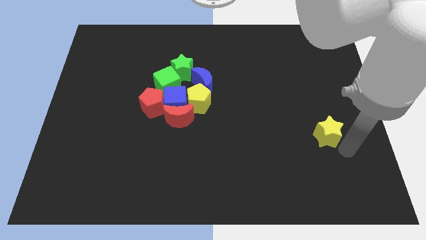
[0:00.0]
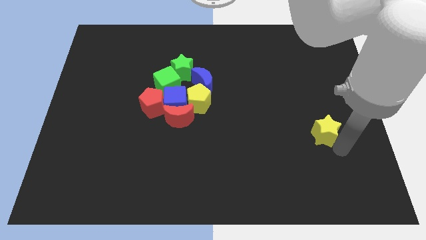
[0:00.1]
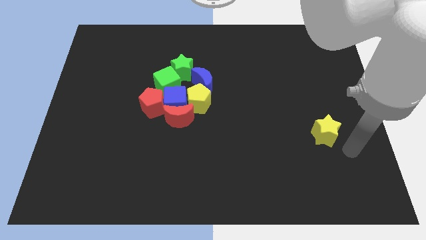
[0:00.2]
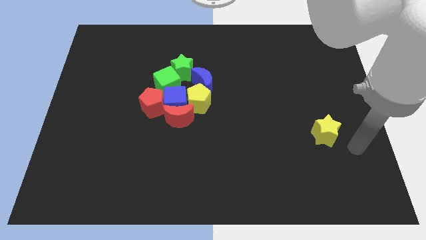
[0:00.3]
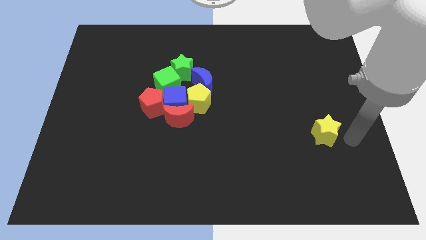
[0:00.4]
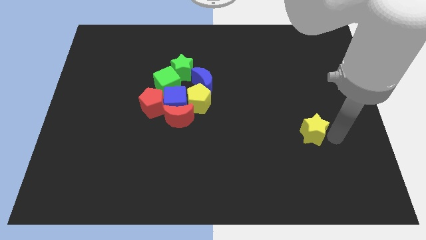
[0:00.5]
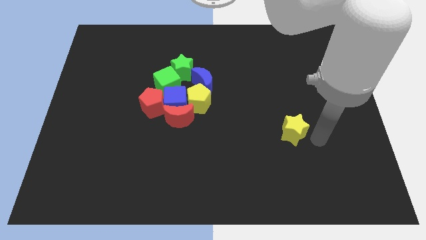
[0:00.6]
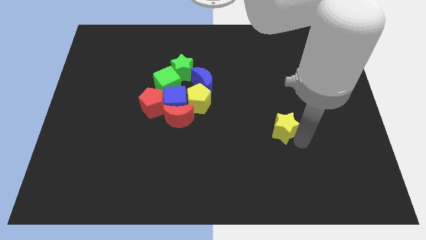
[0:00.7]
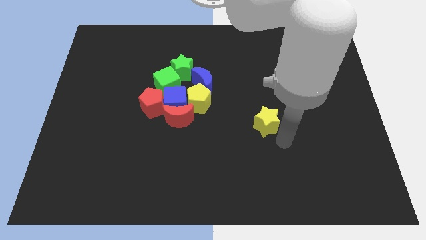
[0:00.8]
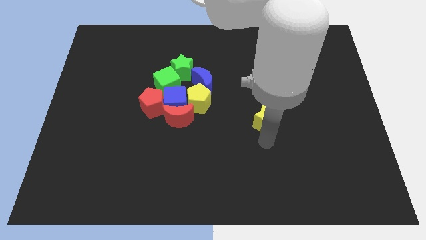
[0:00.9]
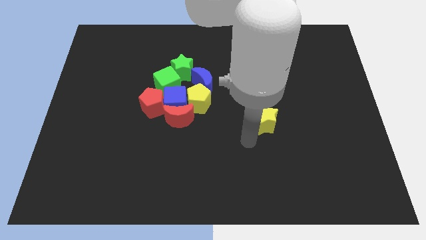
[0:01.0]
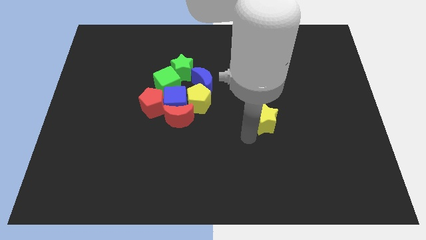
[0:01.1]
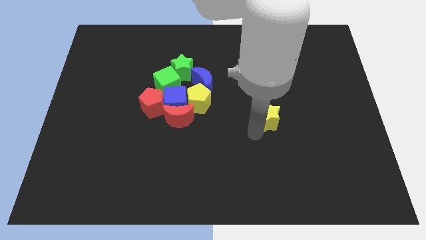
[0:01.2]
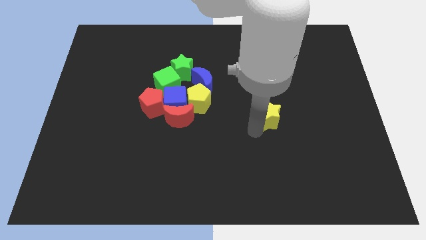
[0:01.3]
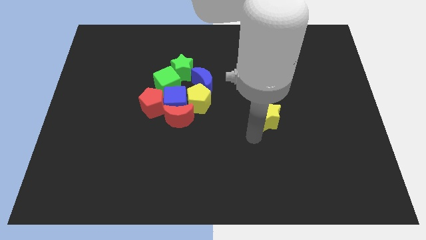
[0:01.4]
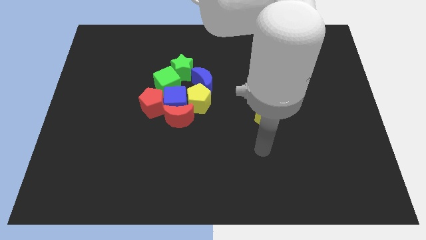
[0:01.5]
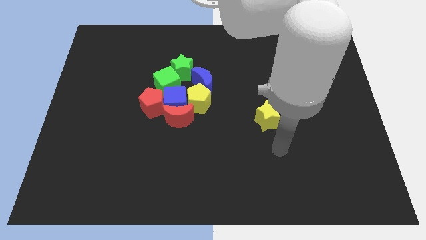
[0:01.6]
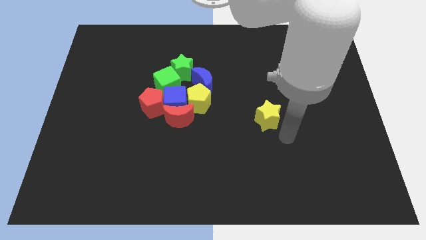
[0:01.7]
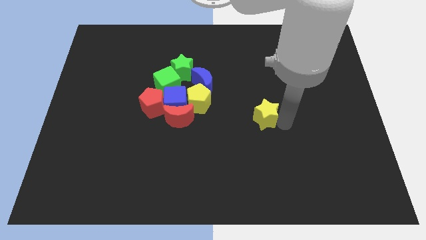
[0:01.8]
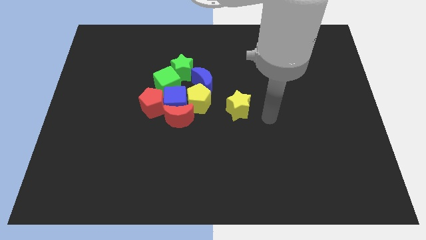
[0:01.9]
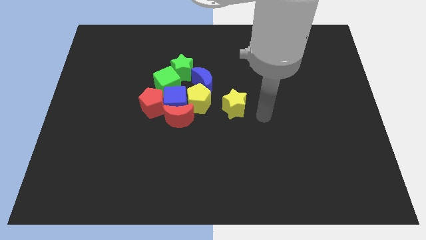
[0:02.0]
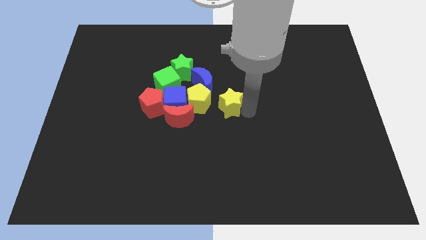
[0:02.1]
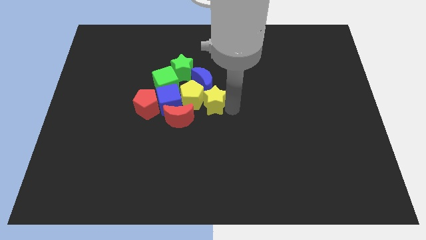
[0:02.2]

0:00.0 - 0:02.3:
move the yellow star towards right side of the yellow pentagon

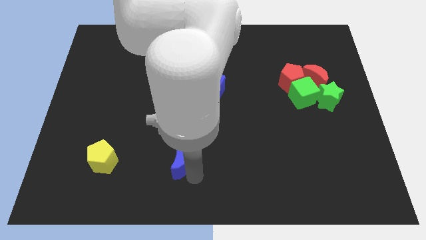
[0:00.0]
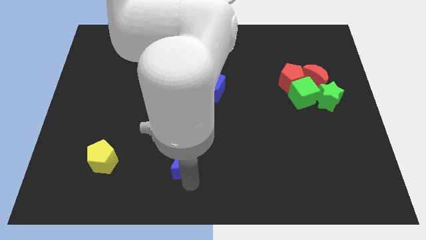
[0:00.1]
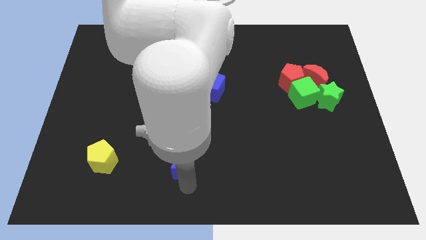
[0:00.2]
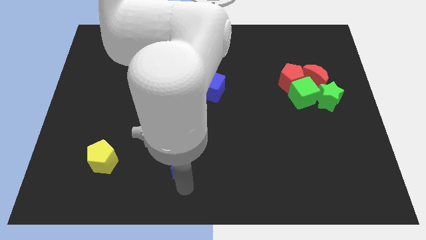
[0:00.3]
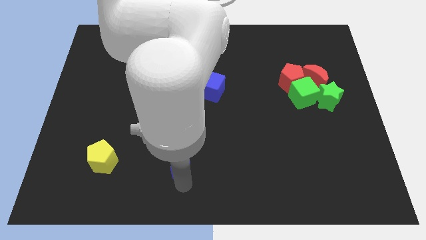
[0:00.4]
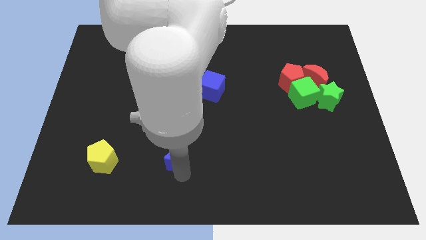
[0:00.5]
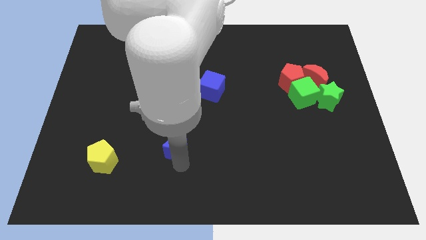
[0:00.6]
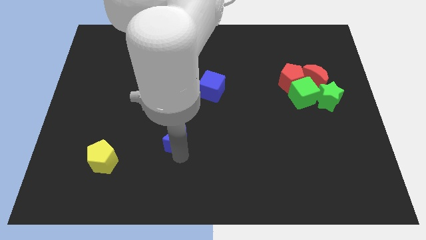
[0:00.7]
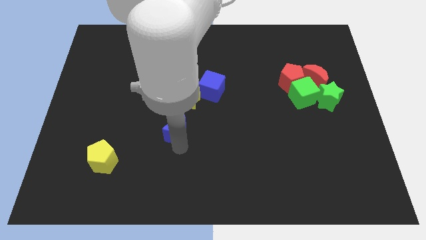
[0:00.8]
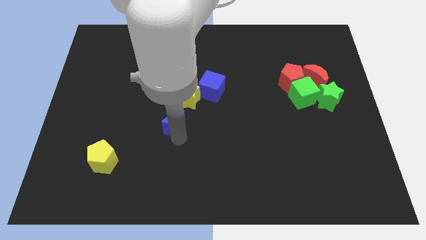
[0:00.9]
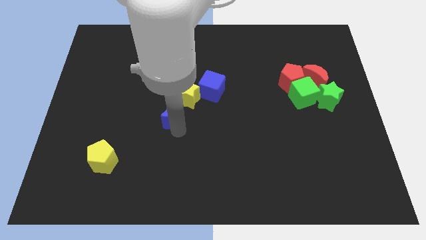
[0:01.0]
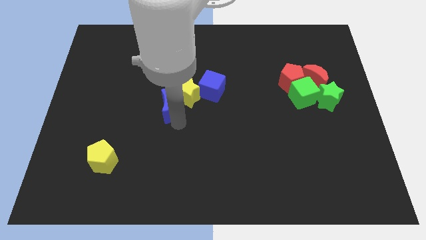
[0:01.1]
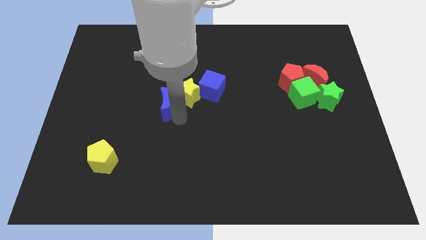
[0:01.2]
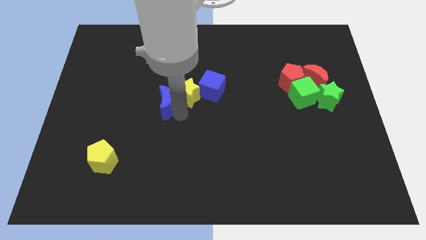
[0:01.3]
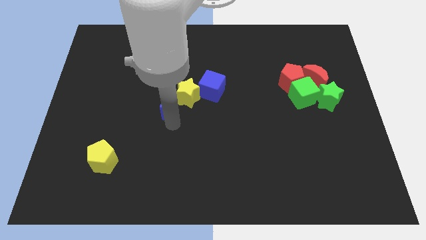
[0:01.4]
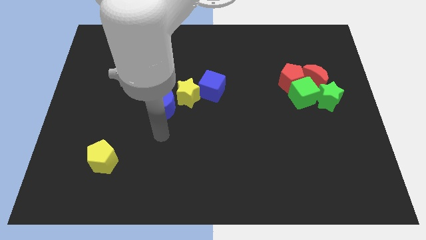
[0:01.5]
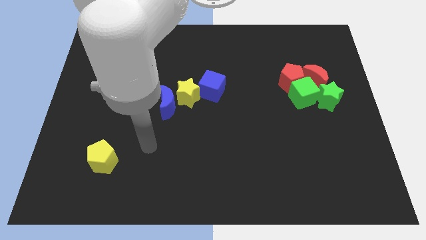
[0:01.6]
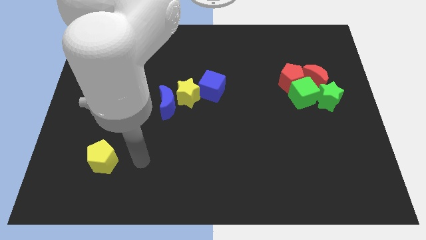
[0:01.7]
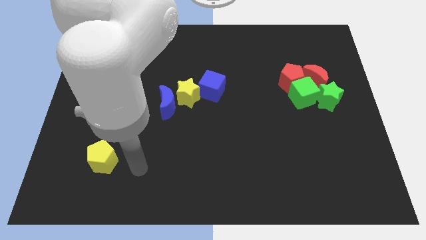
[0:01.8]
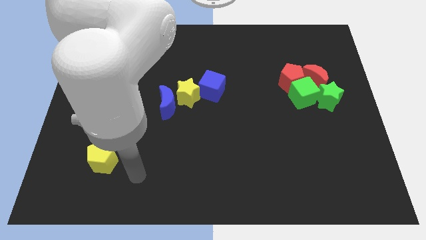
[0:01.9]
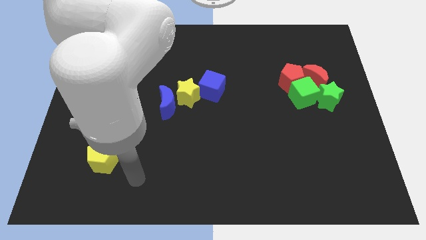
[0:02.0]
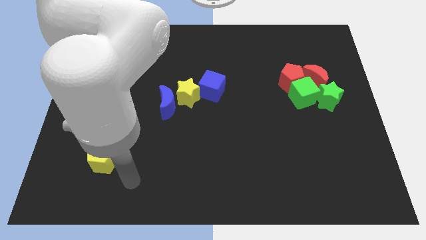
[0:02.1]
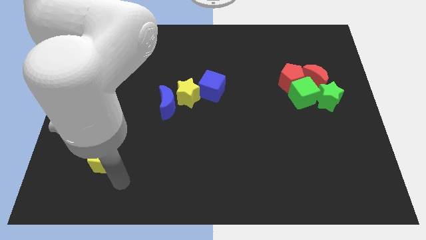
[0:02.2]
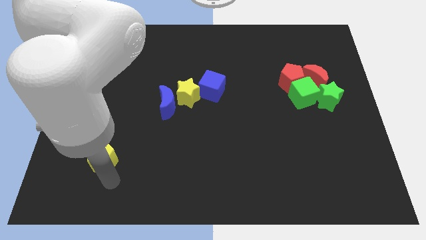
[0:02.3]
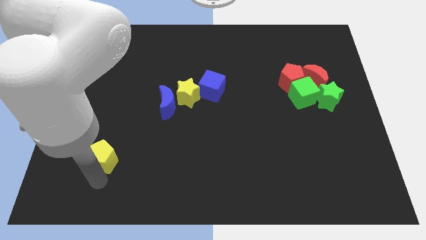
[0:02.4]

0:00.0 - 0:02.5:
move the blue crescent close to the yellow star and go away

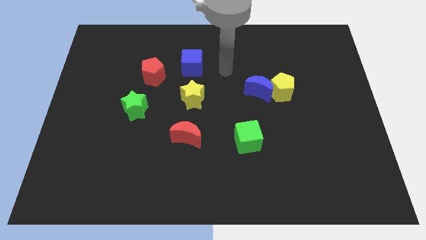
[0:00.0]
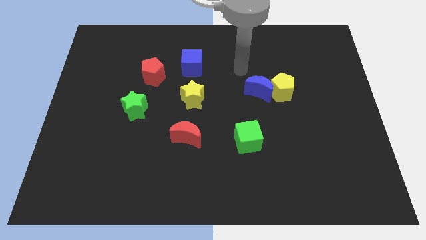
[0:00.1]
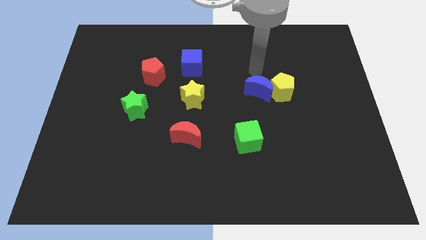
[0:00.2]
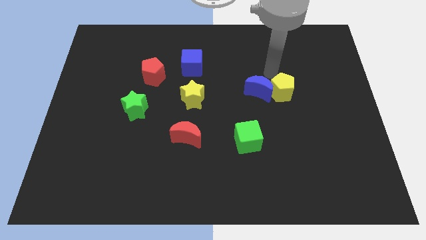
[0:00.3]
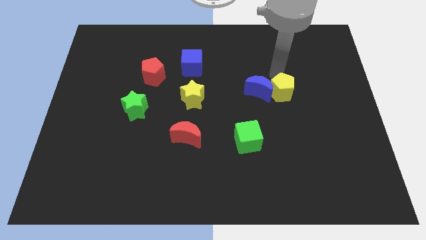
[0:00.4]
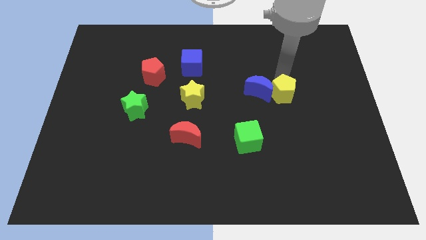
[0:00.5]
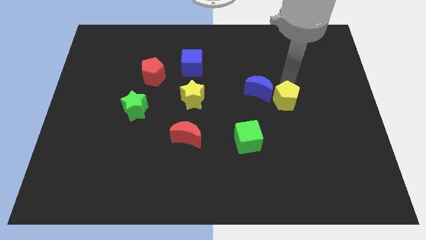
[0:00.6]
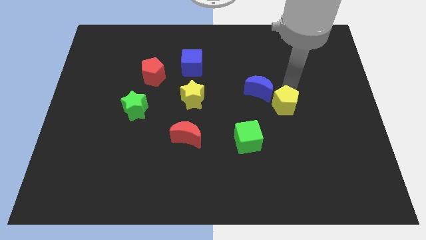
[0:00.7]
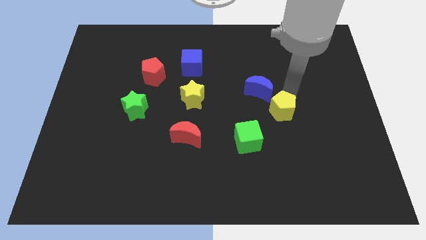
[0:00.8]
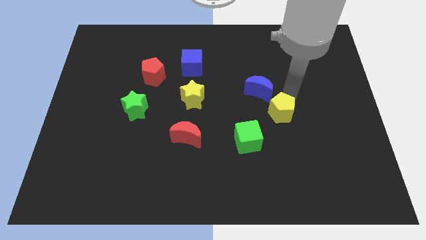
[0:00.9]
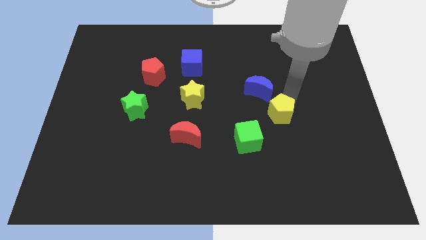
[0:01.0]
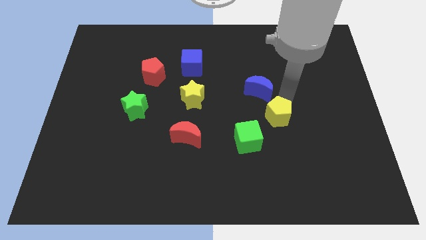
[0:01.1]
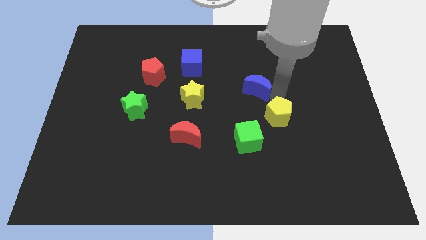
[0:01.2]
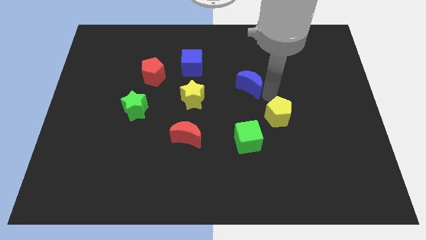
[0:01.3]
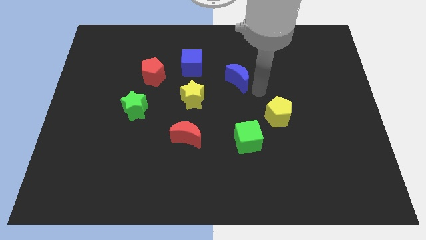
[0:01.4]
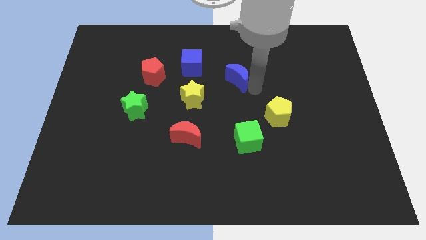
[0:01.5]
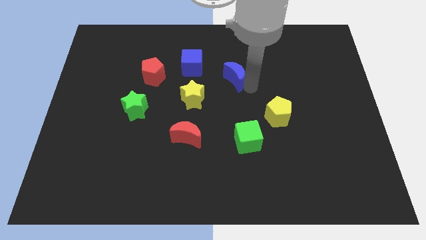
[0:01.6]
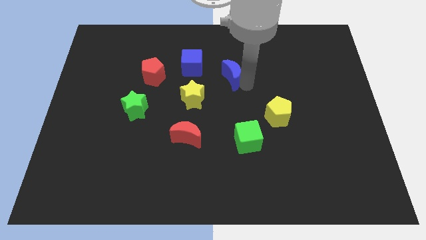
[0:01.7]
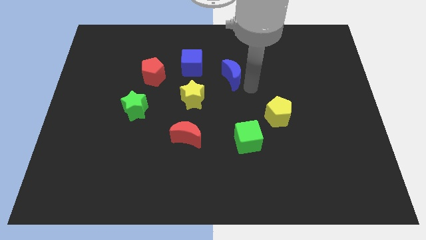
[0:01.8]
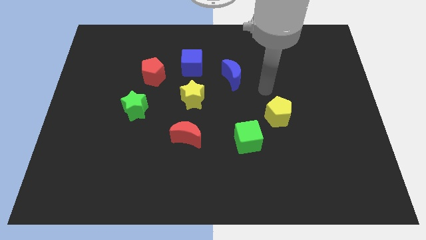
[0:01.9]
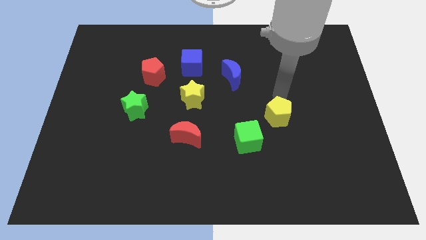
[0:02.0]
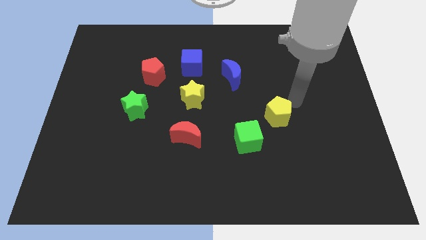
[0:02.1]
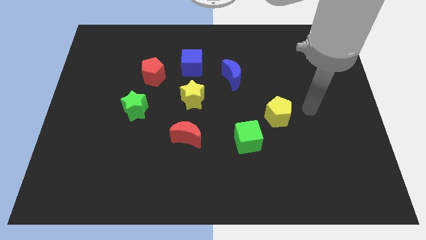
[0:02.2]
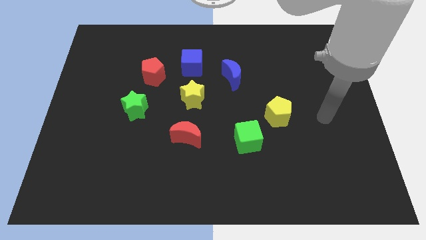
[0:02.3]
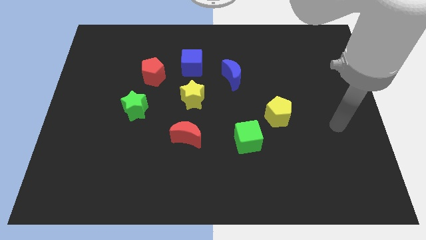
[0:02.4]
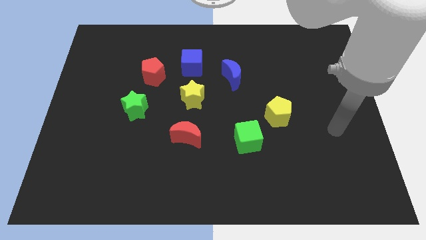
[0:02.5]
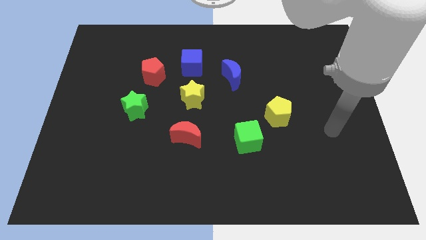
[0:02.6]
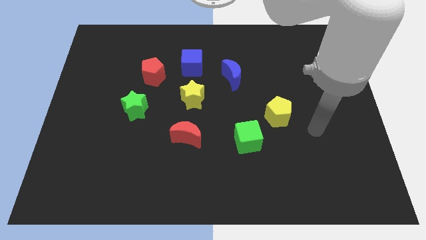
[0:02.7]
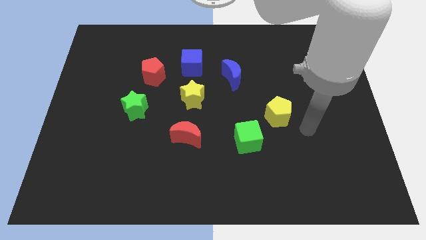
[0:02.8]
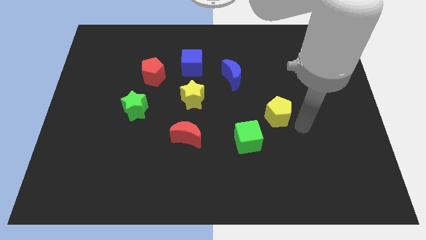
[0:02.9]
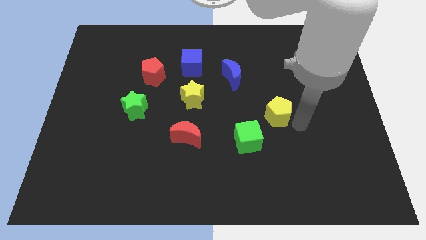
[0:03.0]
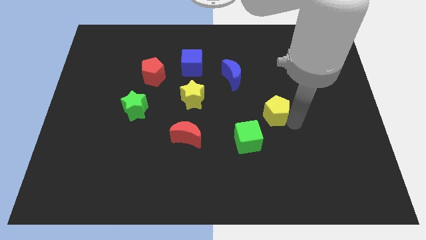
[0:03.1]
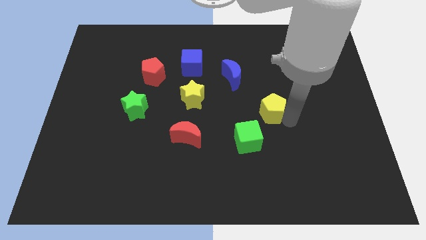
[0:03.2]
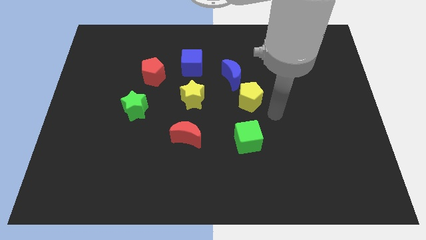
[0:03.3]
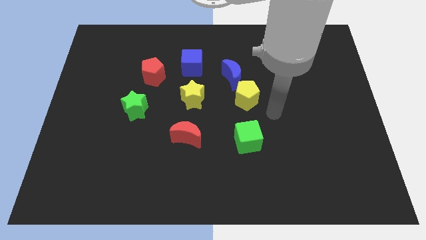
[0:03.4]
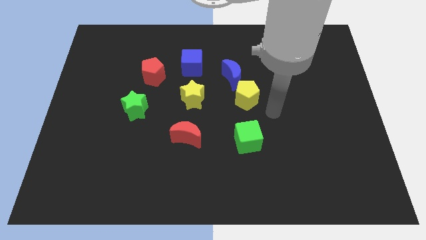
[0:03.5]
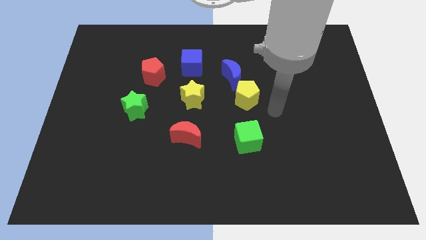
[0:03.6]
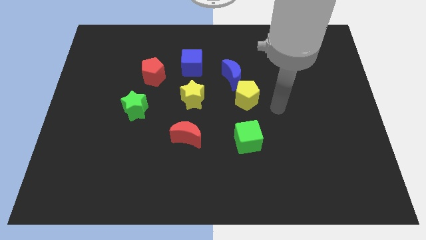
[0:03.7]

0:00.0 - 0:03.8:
push yellow pentagon above green cube

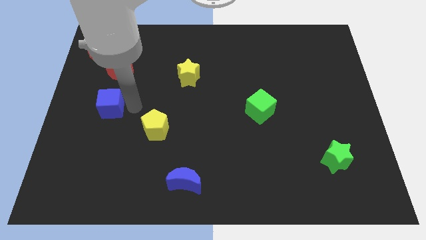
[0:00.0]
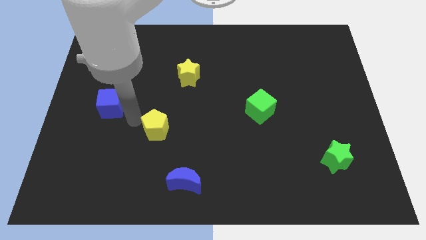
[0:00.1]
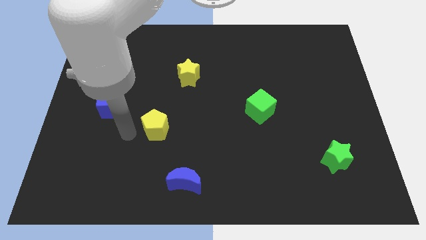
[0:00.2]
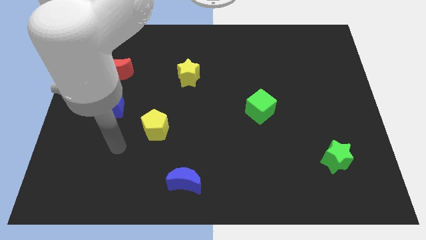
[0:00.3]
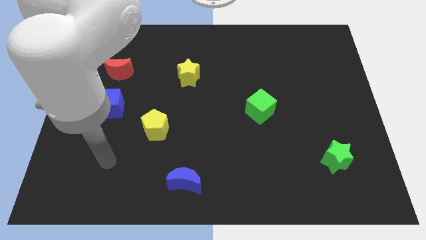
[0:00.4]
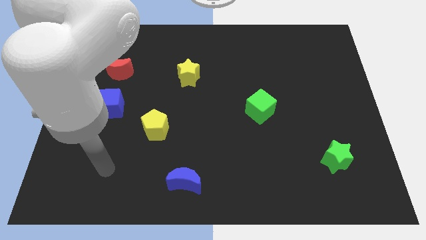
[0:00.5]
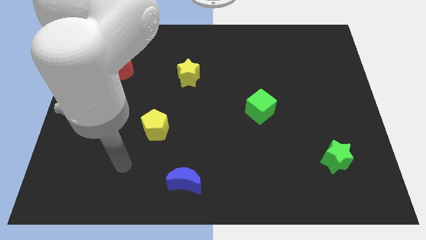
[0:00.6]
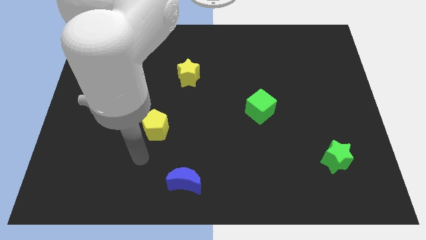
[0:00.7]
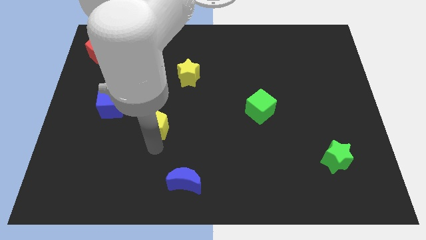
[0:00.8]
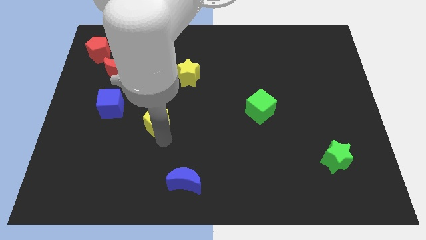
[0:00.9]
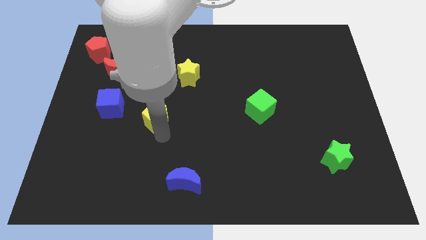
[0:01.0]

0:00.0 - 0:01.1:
point your arm below yellow pentagon
